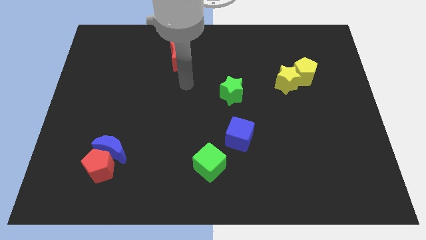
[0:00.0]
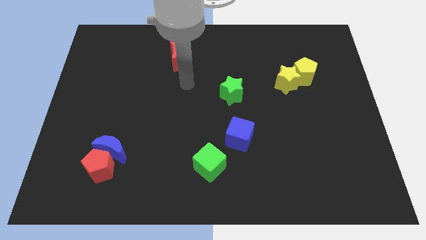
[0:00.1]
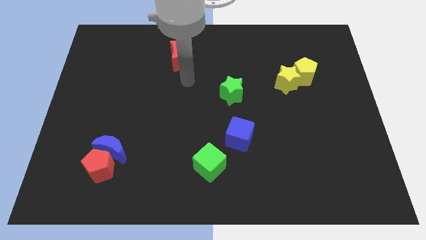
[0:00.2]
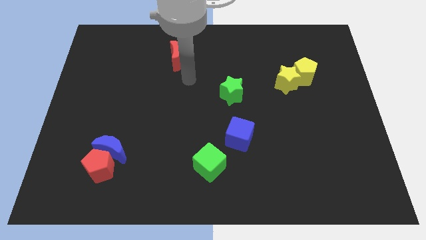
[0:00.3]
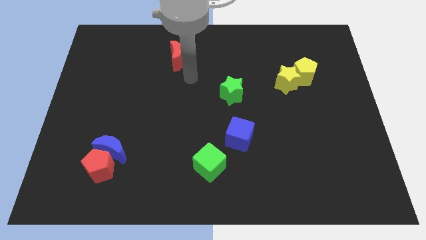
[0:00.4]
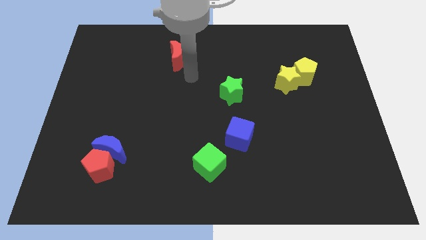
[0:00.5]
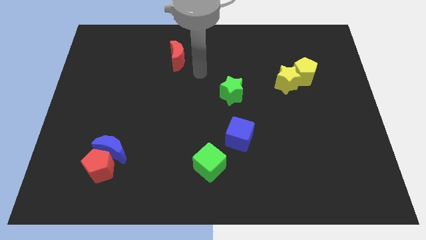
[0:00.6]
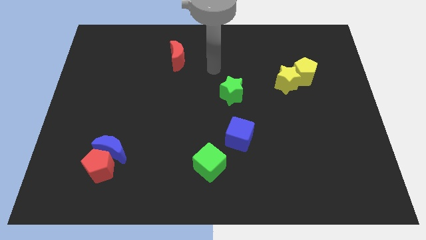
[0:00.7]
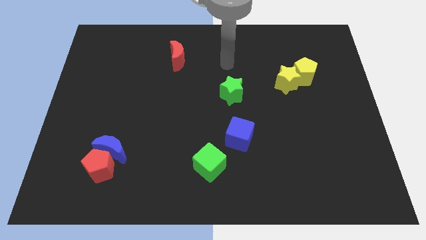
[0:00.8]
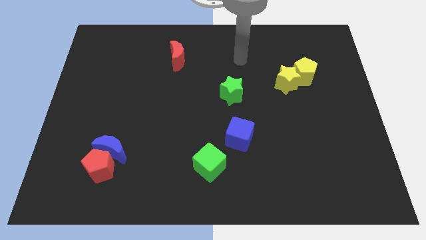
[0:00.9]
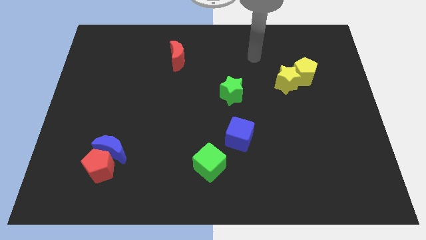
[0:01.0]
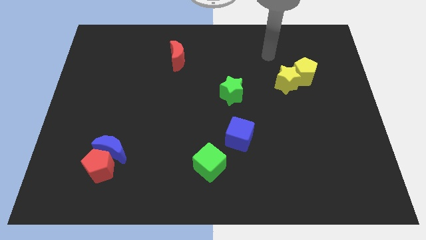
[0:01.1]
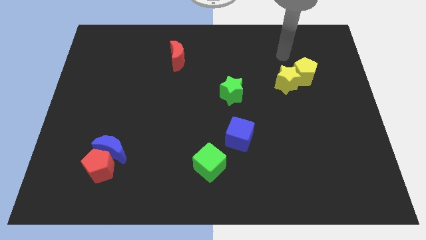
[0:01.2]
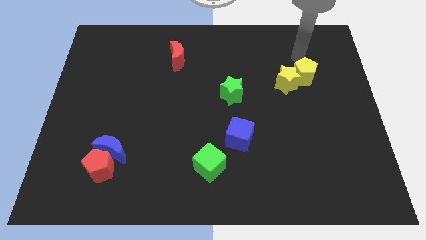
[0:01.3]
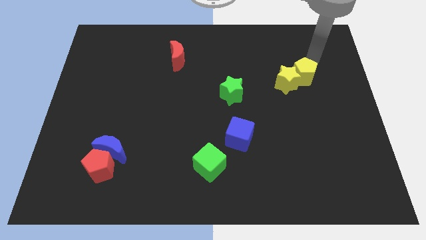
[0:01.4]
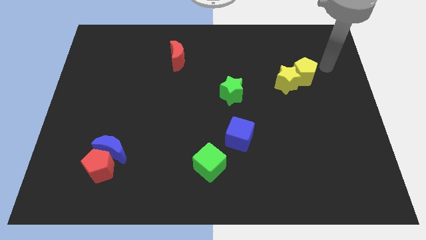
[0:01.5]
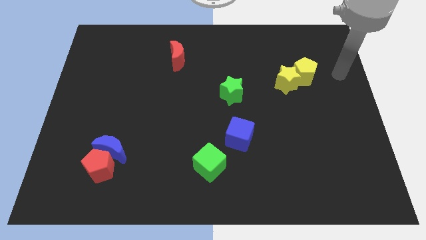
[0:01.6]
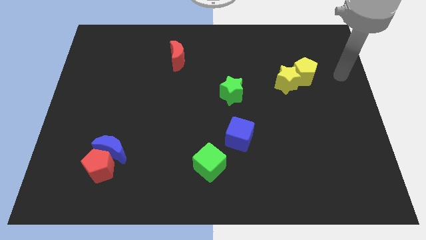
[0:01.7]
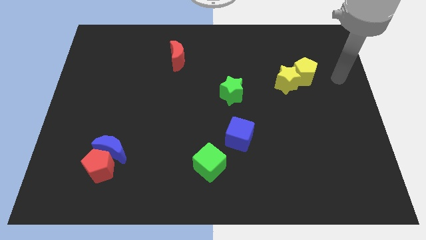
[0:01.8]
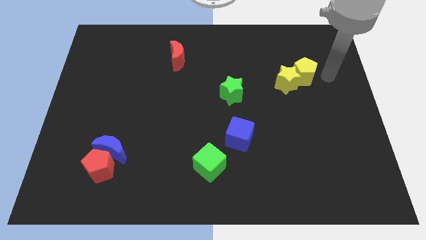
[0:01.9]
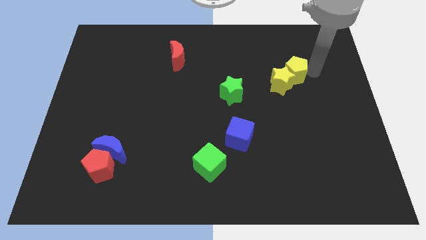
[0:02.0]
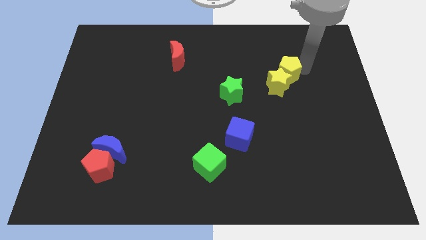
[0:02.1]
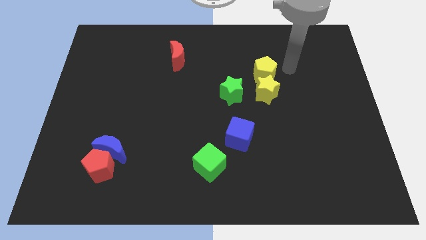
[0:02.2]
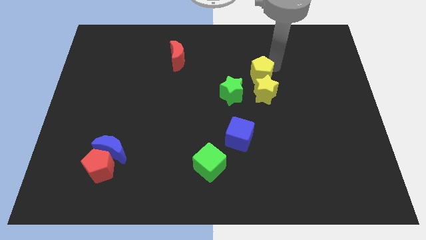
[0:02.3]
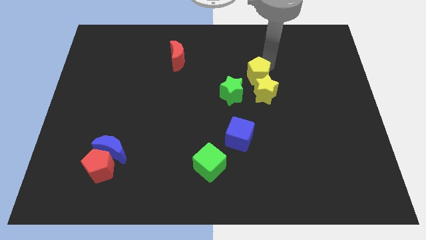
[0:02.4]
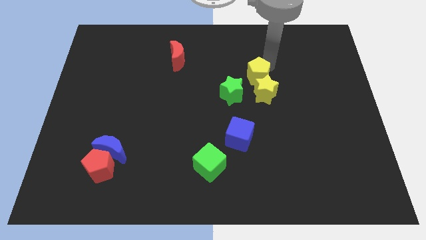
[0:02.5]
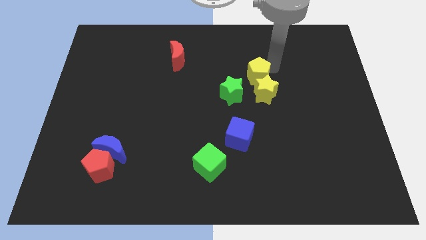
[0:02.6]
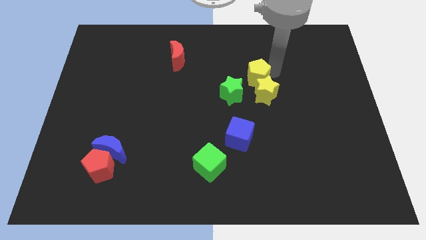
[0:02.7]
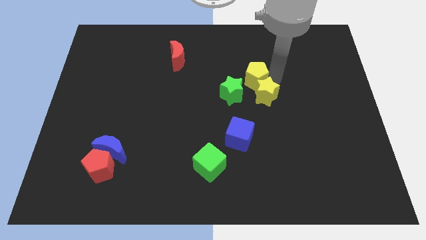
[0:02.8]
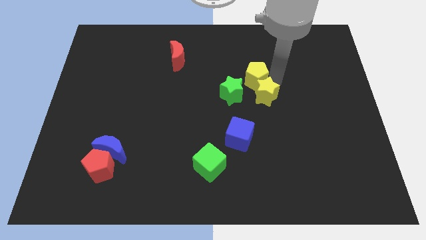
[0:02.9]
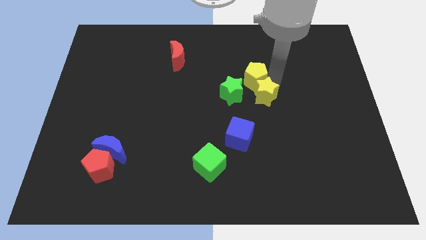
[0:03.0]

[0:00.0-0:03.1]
place yellow pentagon to the top of yellow star

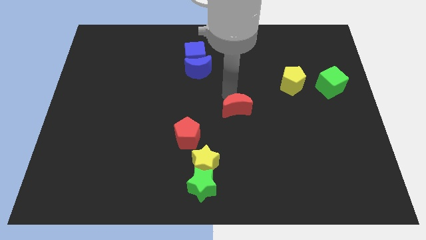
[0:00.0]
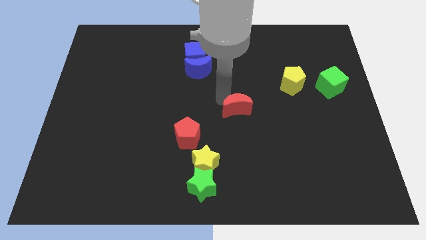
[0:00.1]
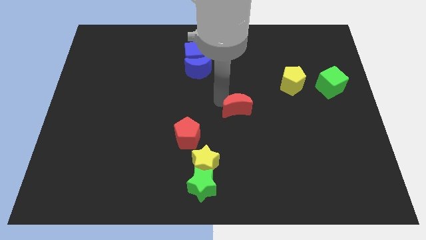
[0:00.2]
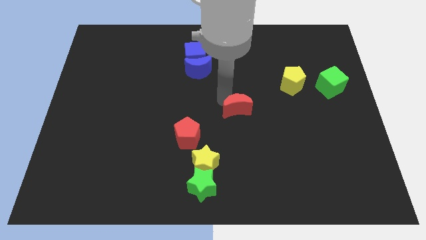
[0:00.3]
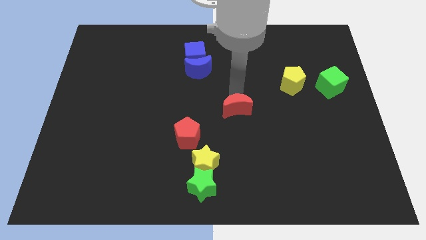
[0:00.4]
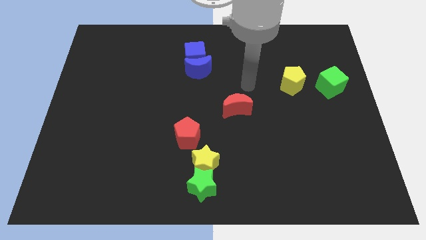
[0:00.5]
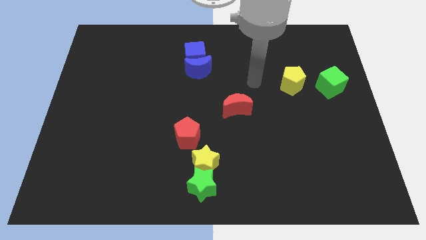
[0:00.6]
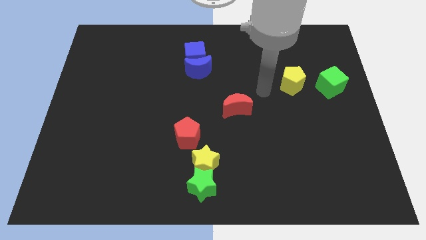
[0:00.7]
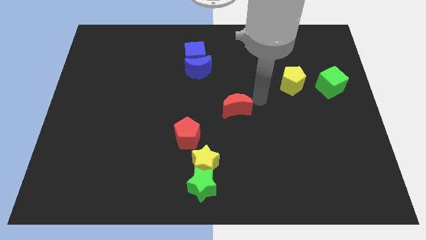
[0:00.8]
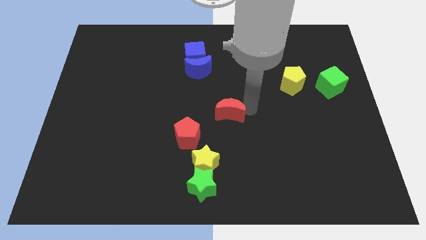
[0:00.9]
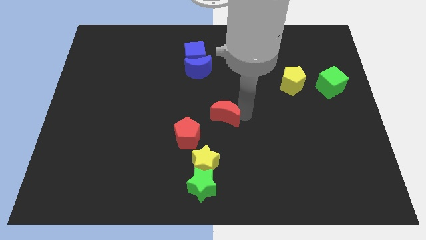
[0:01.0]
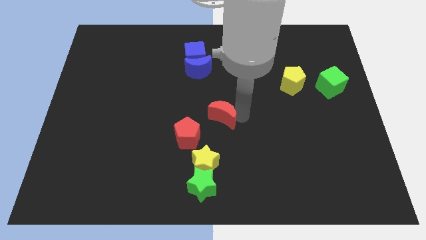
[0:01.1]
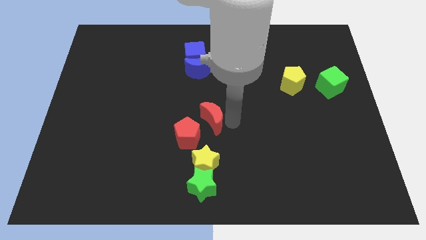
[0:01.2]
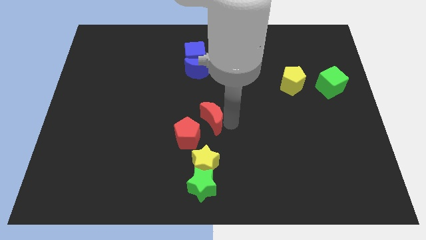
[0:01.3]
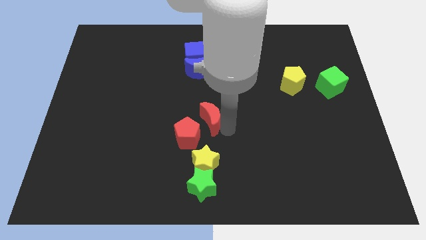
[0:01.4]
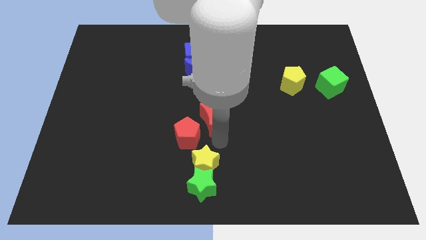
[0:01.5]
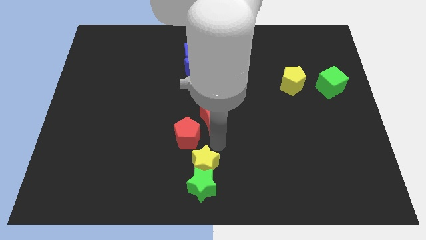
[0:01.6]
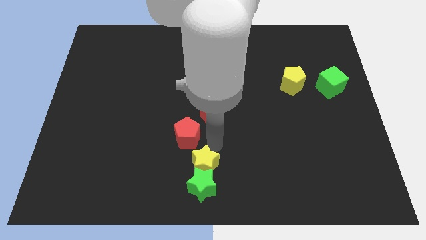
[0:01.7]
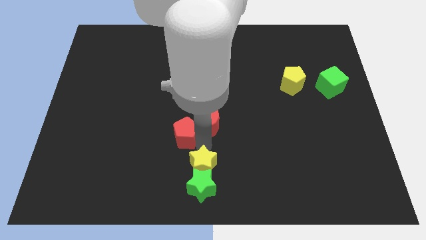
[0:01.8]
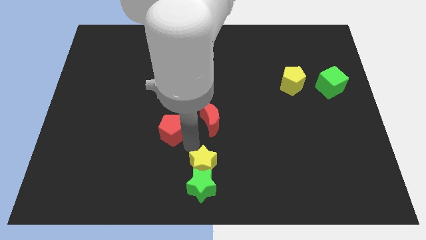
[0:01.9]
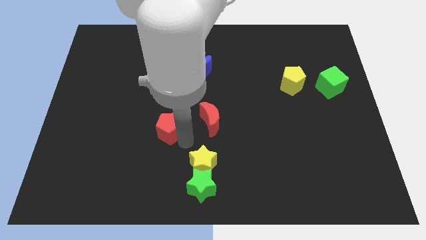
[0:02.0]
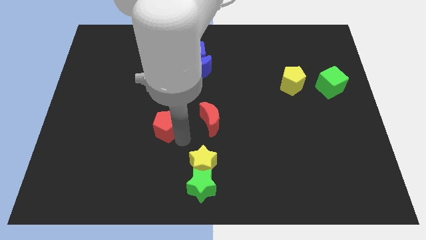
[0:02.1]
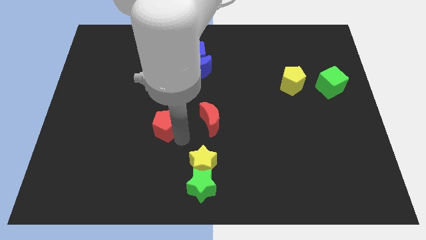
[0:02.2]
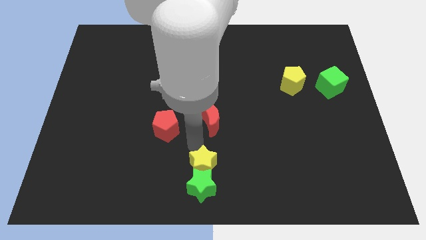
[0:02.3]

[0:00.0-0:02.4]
place red pentagon beside red crescent

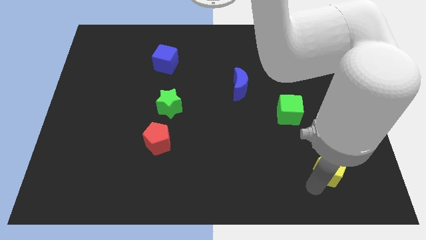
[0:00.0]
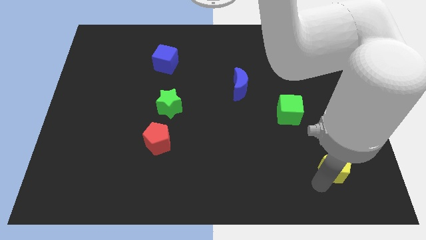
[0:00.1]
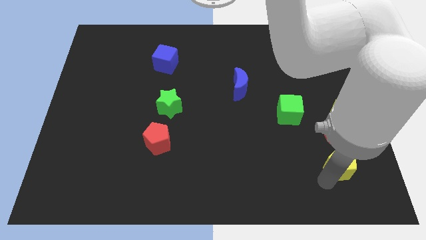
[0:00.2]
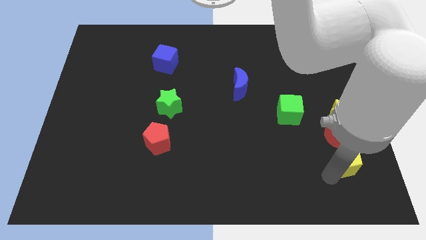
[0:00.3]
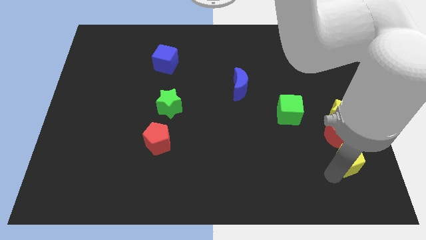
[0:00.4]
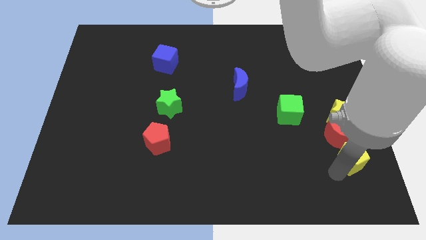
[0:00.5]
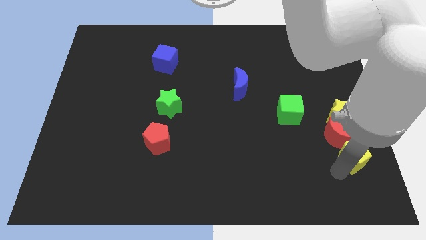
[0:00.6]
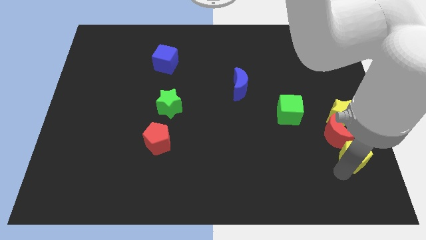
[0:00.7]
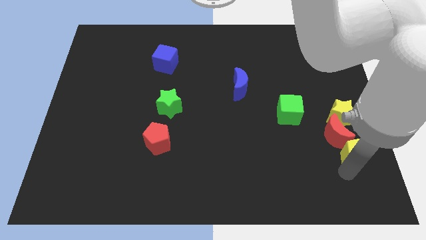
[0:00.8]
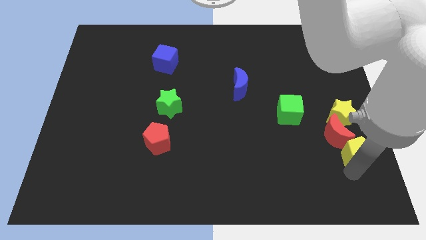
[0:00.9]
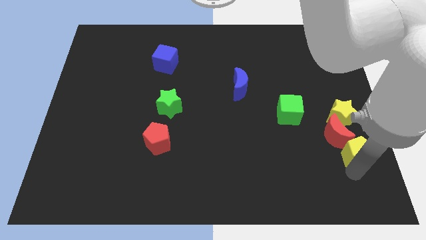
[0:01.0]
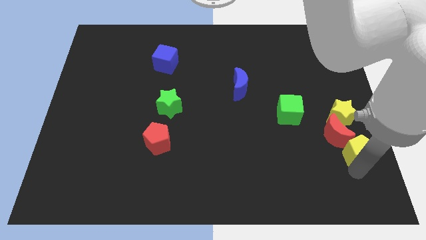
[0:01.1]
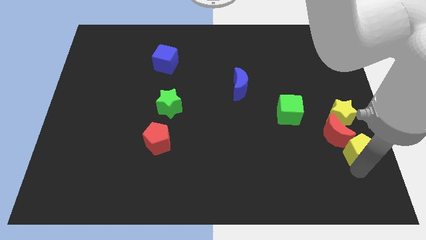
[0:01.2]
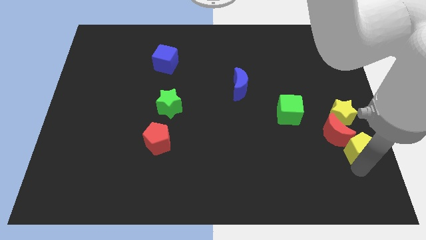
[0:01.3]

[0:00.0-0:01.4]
push the yellow pentagon towards the red crescent

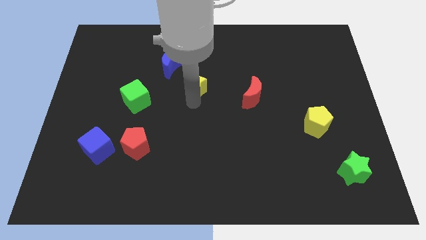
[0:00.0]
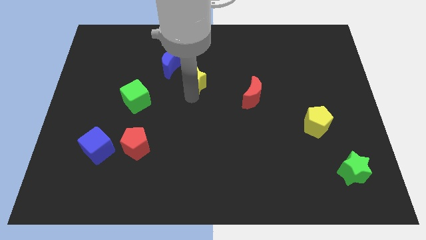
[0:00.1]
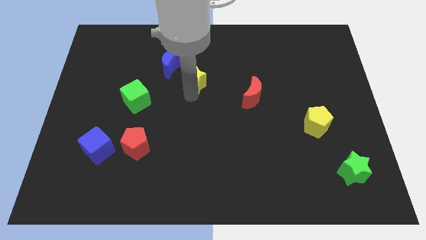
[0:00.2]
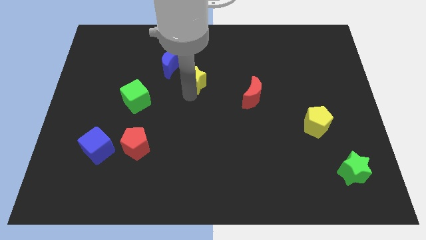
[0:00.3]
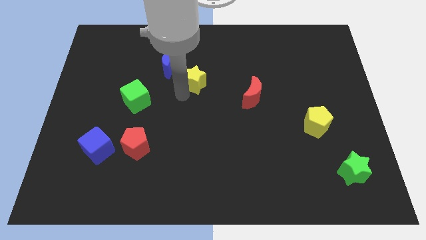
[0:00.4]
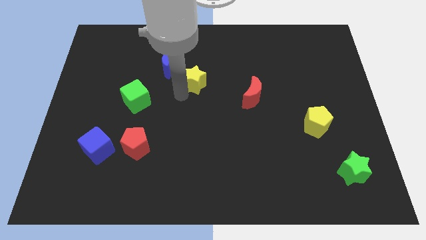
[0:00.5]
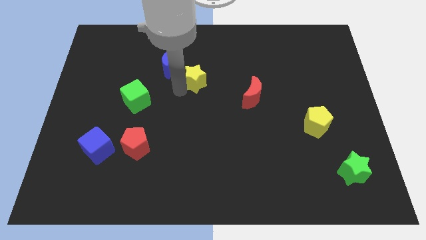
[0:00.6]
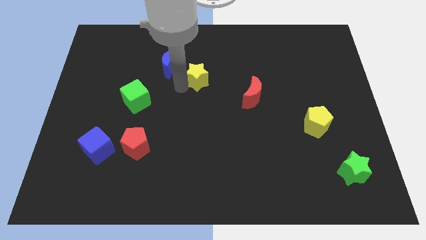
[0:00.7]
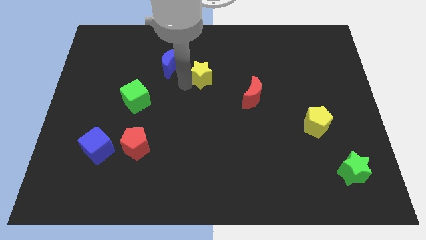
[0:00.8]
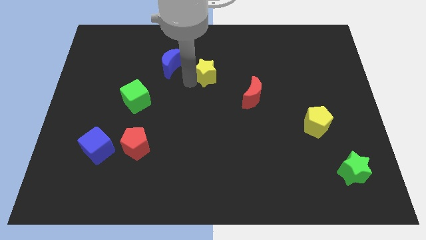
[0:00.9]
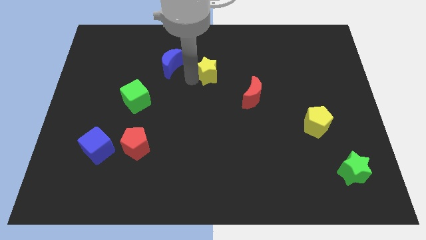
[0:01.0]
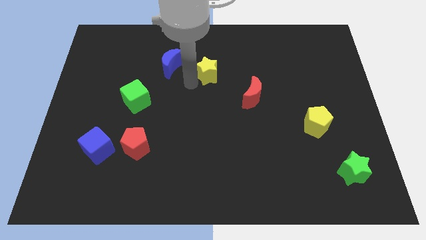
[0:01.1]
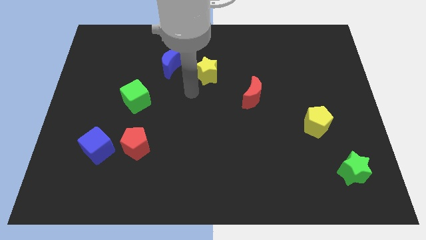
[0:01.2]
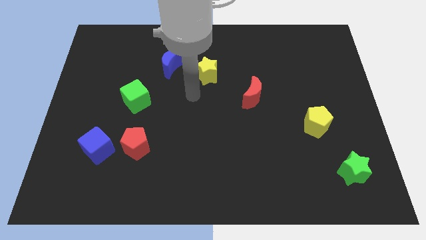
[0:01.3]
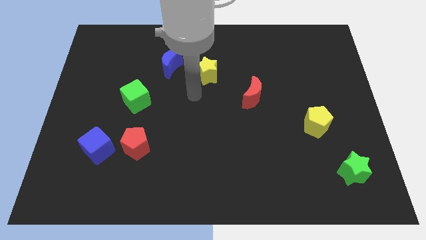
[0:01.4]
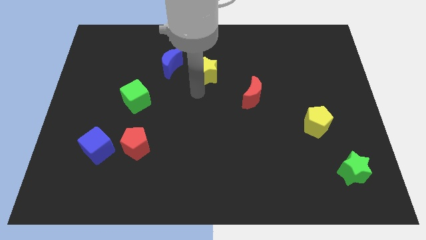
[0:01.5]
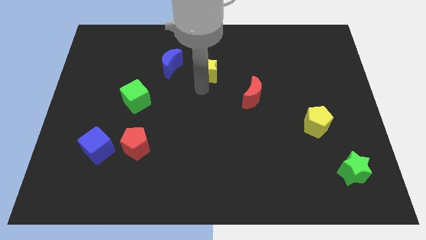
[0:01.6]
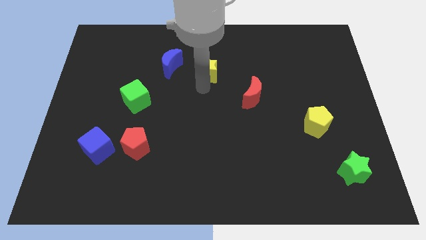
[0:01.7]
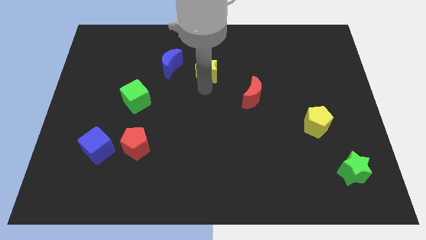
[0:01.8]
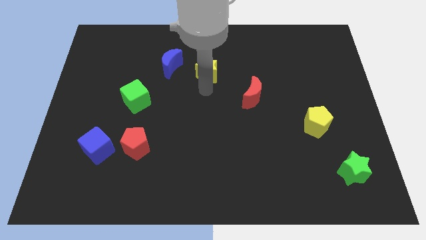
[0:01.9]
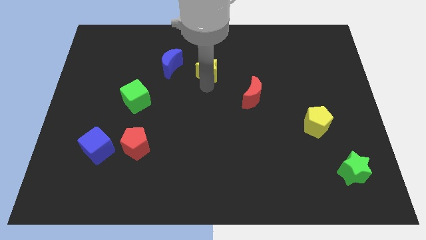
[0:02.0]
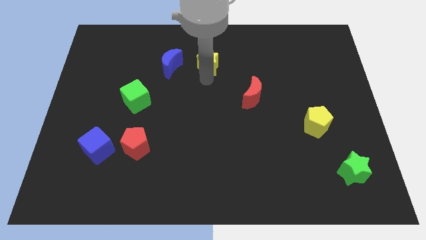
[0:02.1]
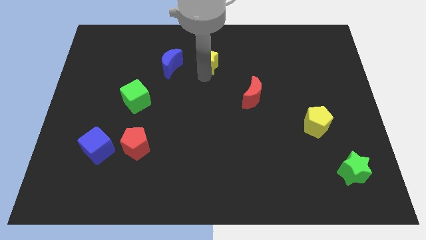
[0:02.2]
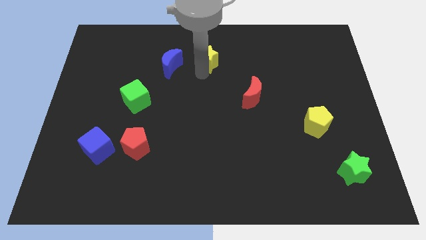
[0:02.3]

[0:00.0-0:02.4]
move the yellow star right to the blue moon
